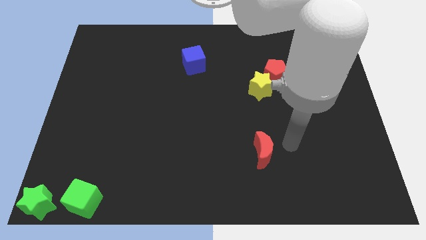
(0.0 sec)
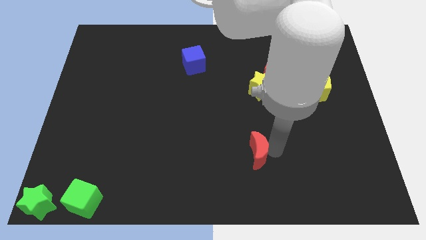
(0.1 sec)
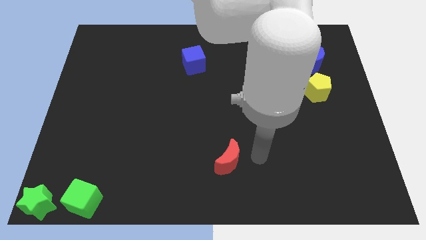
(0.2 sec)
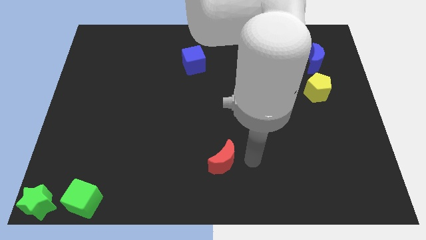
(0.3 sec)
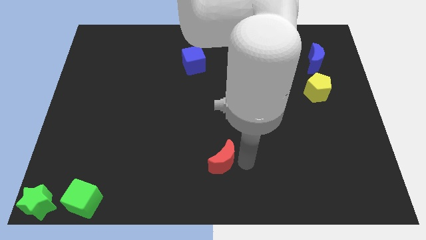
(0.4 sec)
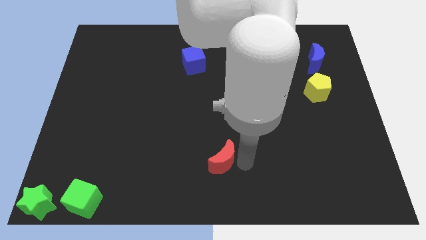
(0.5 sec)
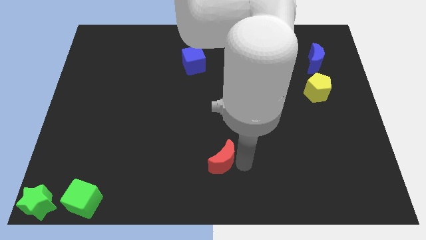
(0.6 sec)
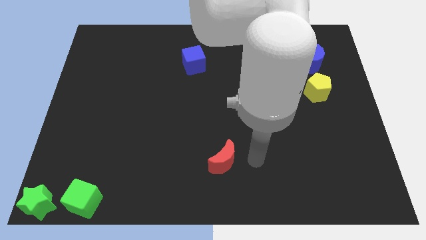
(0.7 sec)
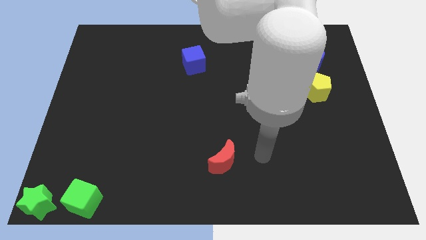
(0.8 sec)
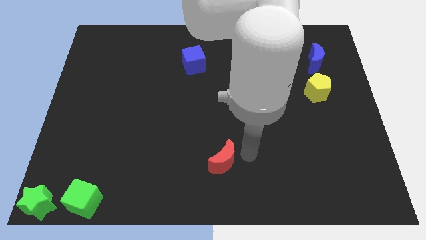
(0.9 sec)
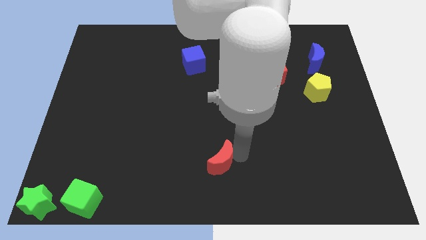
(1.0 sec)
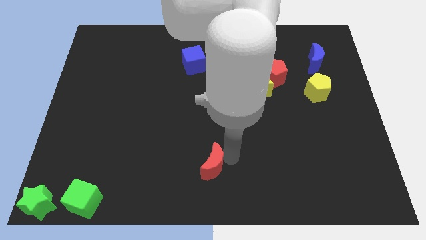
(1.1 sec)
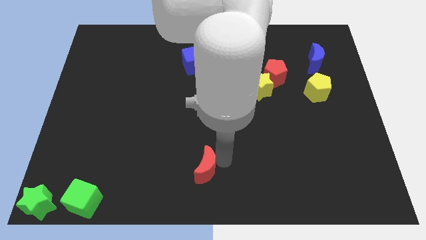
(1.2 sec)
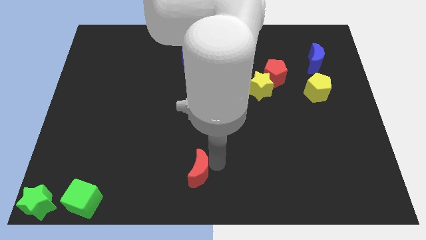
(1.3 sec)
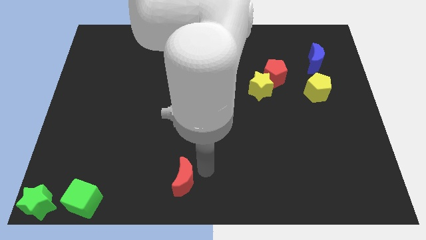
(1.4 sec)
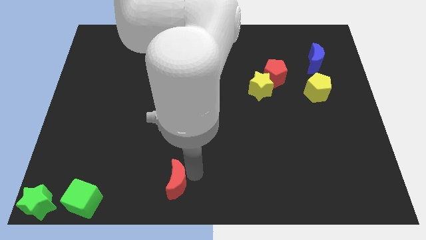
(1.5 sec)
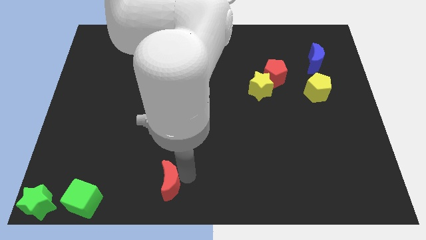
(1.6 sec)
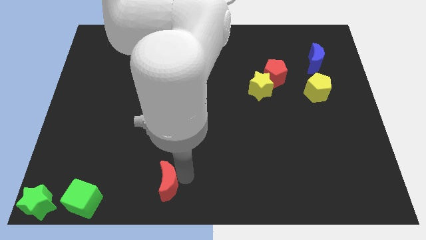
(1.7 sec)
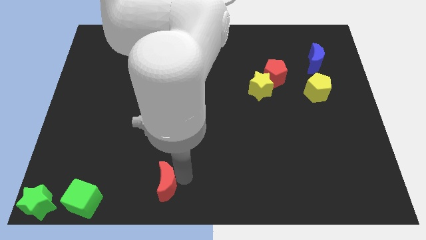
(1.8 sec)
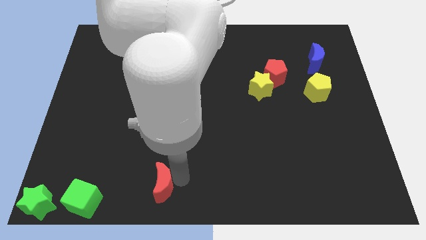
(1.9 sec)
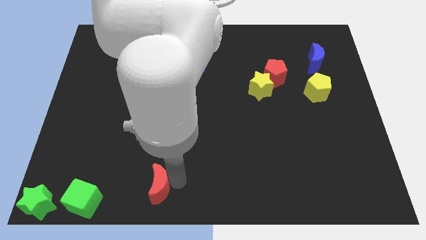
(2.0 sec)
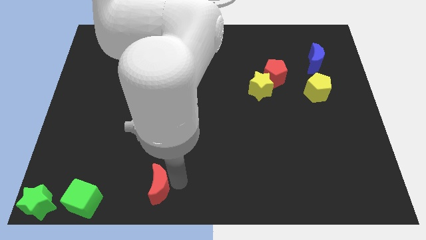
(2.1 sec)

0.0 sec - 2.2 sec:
push the red moon towards the green cube

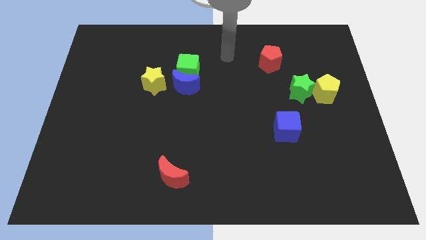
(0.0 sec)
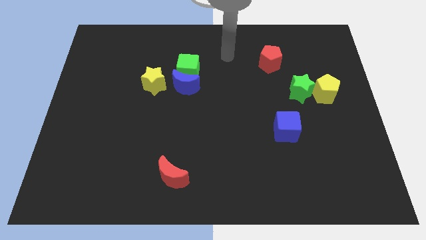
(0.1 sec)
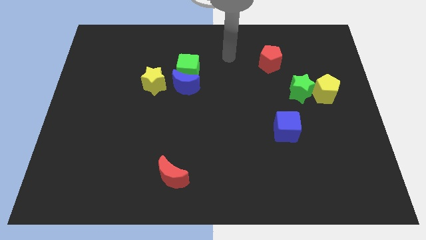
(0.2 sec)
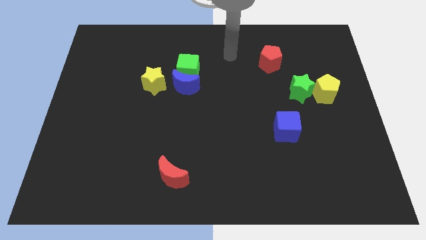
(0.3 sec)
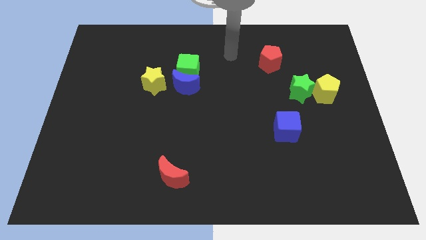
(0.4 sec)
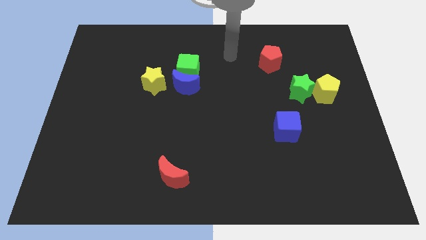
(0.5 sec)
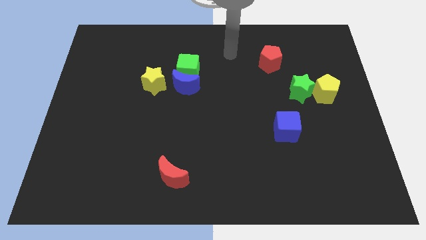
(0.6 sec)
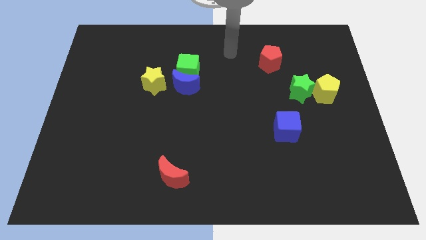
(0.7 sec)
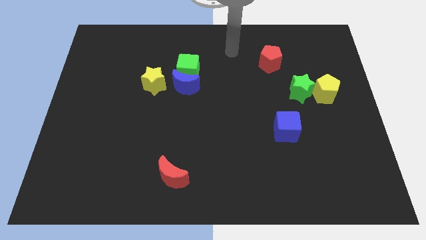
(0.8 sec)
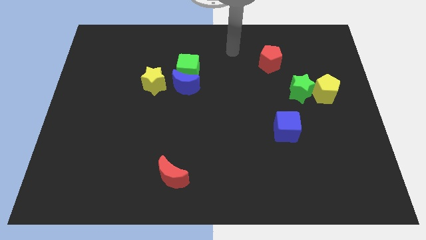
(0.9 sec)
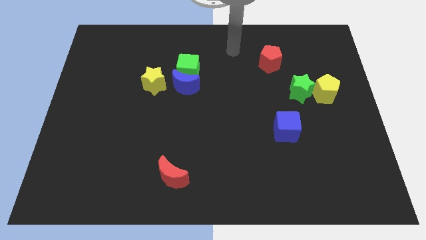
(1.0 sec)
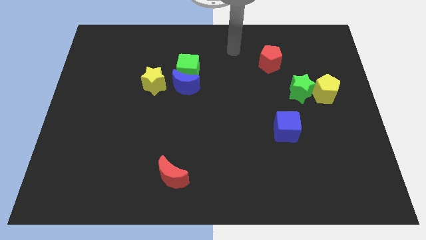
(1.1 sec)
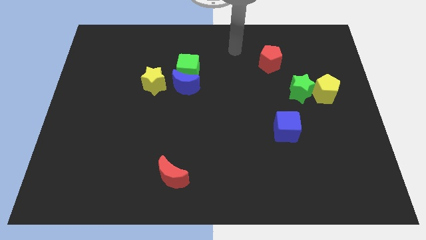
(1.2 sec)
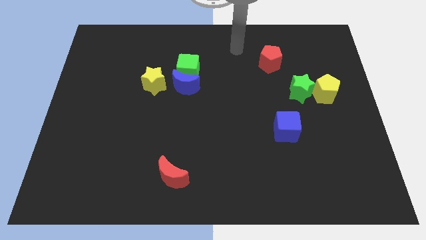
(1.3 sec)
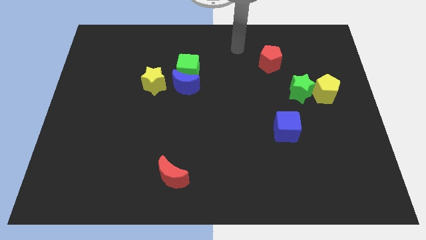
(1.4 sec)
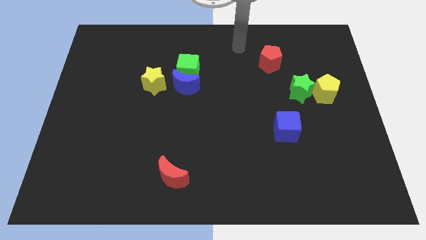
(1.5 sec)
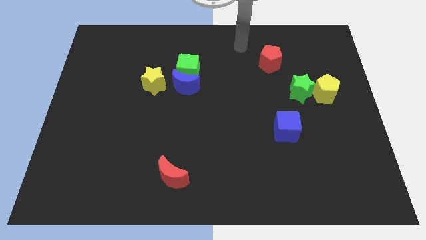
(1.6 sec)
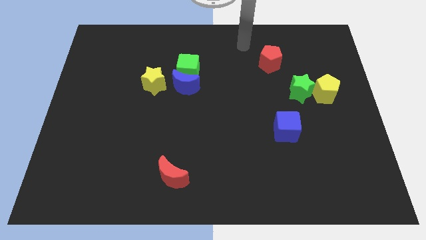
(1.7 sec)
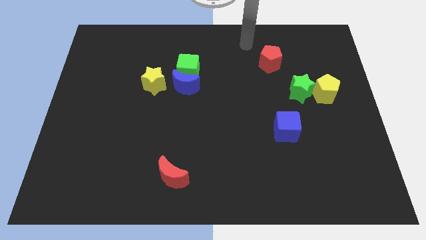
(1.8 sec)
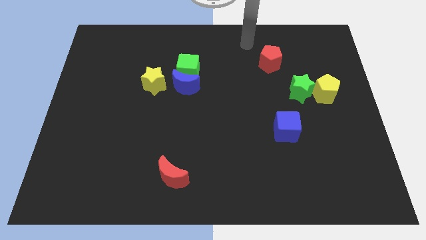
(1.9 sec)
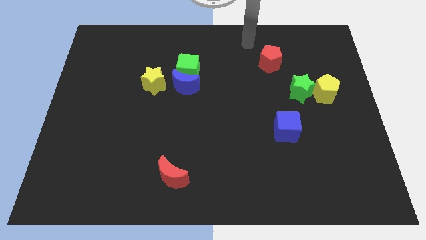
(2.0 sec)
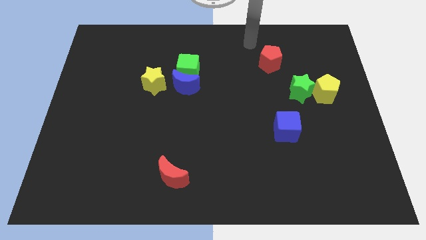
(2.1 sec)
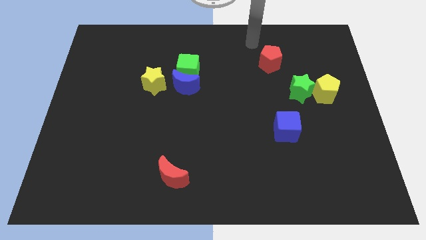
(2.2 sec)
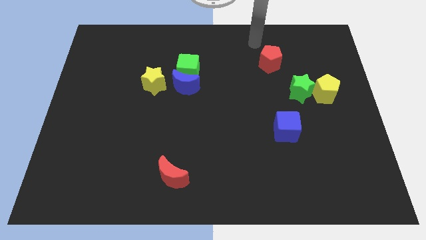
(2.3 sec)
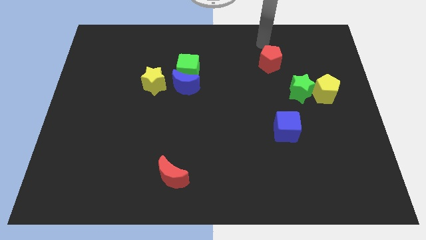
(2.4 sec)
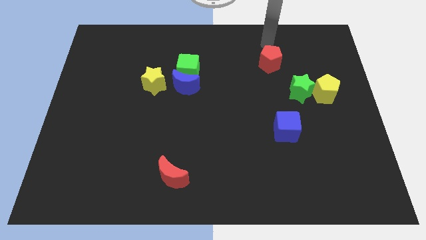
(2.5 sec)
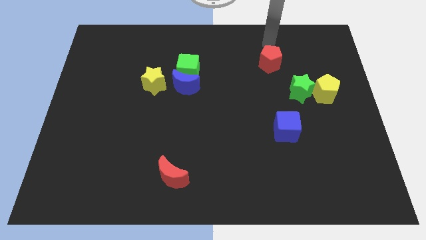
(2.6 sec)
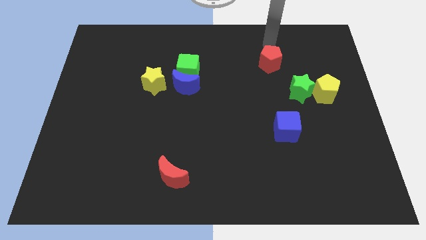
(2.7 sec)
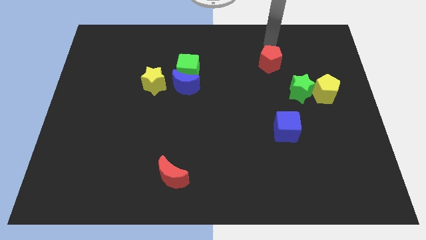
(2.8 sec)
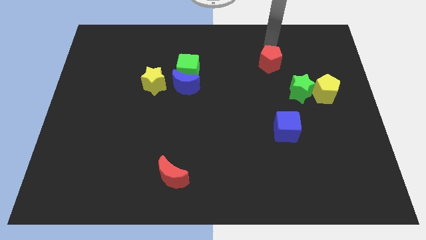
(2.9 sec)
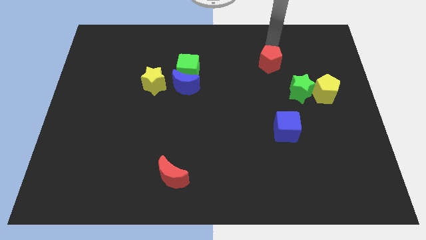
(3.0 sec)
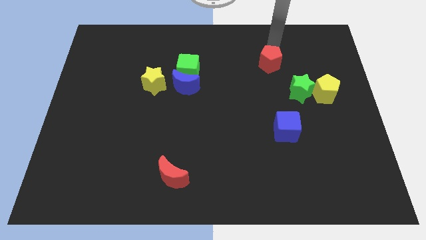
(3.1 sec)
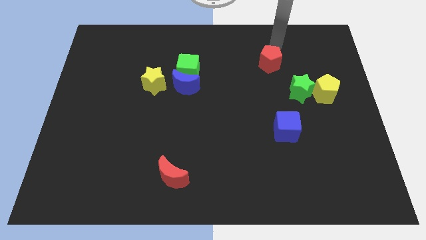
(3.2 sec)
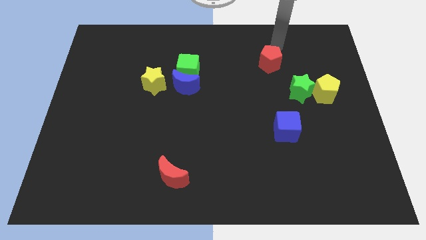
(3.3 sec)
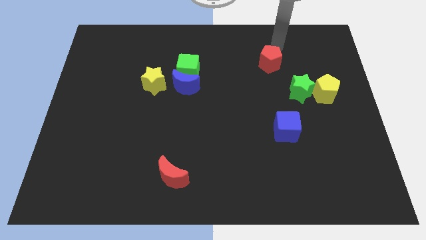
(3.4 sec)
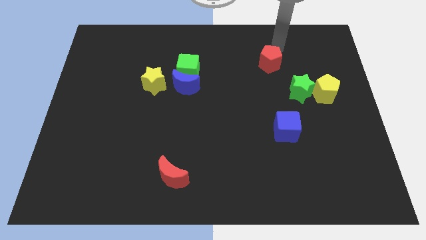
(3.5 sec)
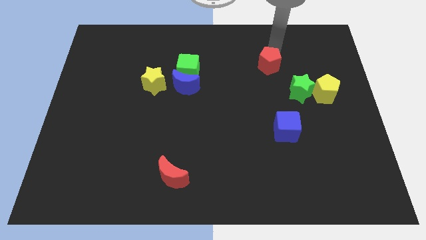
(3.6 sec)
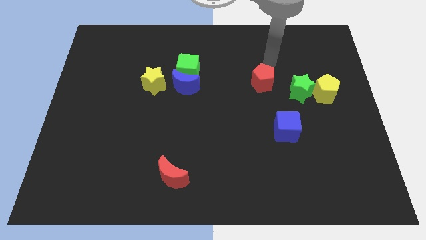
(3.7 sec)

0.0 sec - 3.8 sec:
push the red pentagon vertical left to the green star

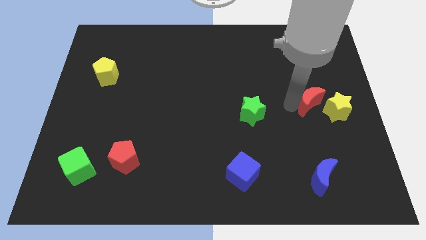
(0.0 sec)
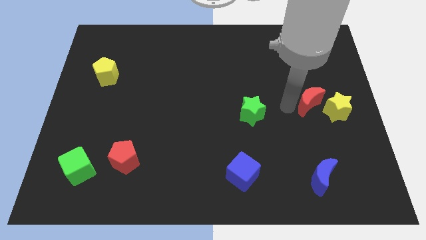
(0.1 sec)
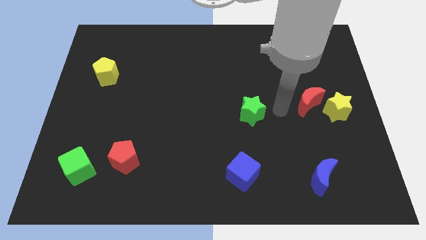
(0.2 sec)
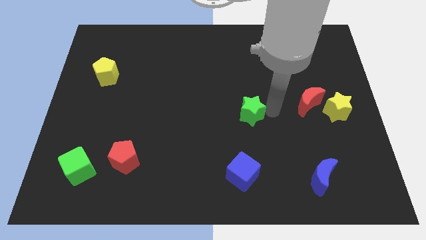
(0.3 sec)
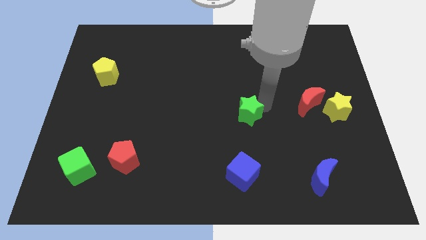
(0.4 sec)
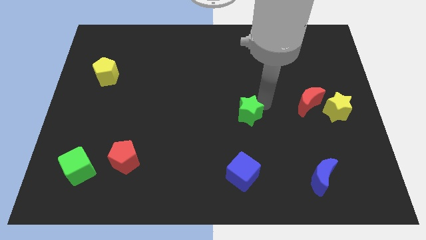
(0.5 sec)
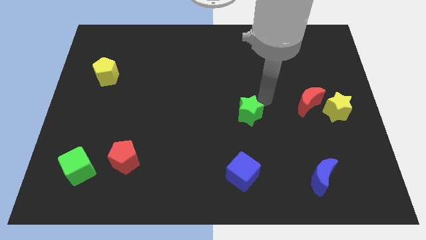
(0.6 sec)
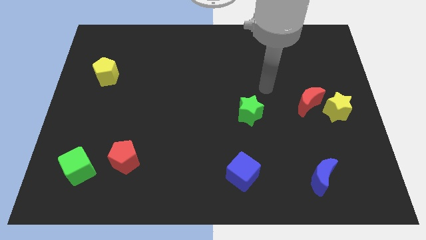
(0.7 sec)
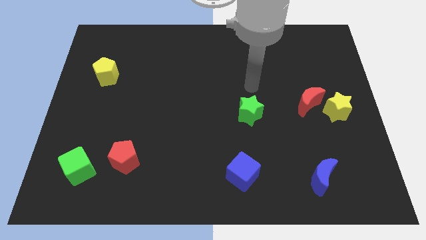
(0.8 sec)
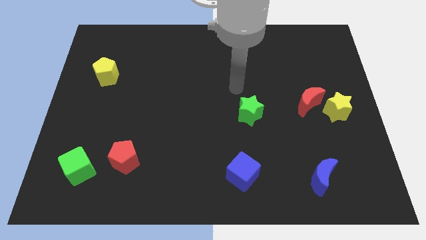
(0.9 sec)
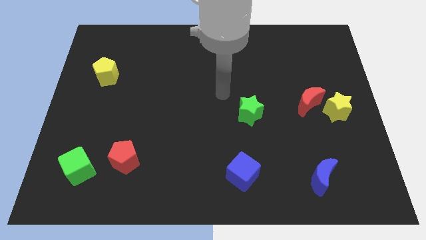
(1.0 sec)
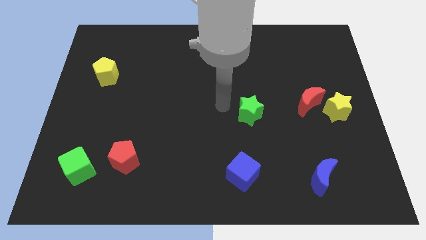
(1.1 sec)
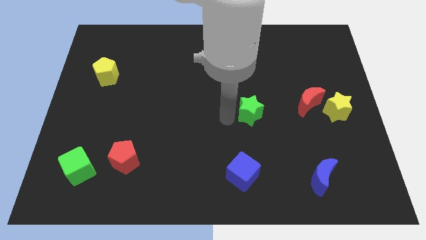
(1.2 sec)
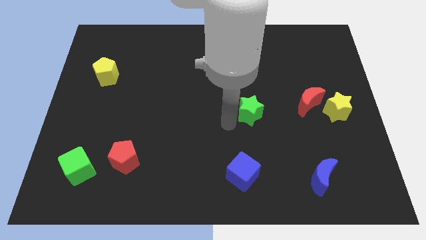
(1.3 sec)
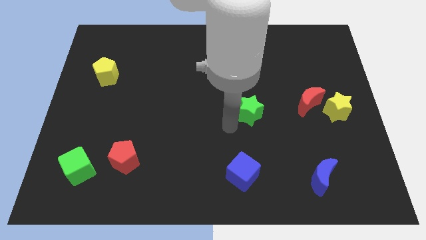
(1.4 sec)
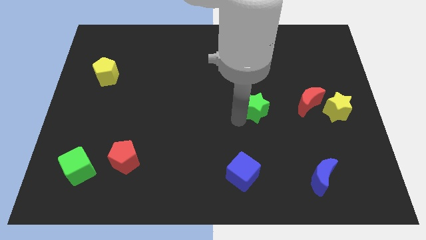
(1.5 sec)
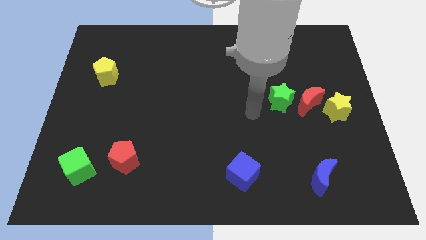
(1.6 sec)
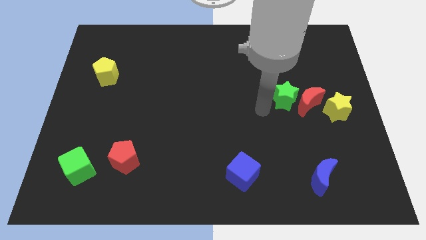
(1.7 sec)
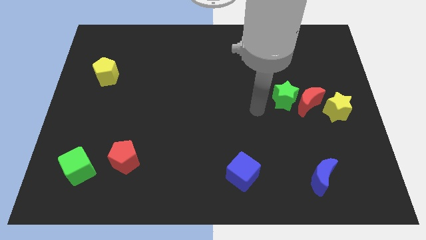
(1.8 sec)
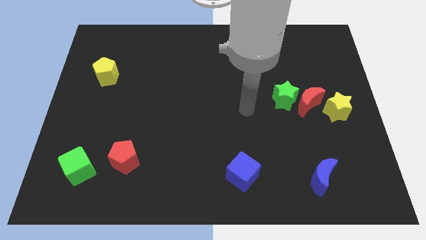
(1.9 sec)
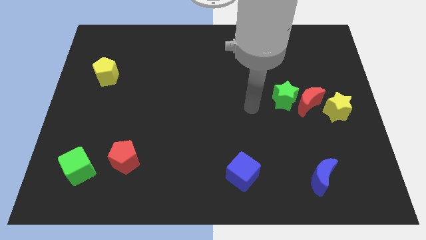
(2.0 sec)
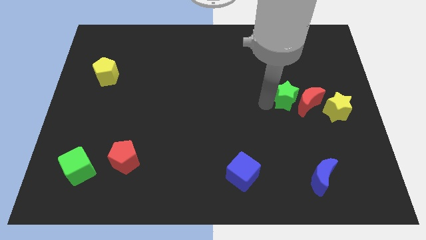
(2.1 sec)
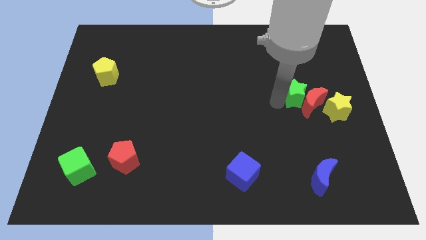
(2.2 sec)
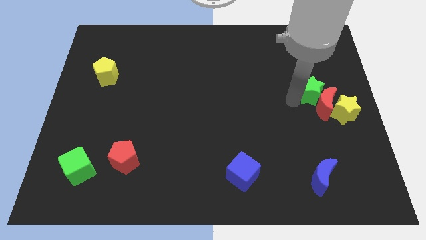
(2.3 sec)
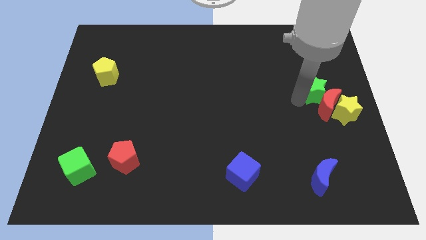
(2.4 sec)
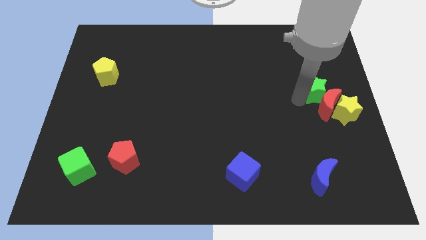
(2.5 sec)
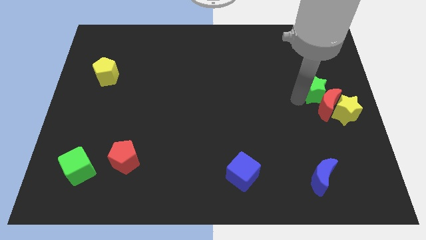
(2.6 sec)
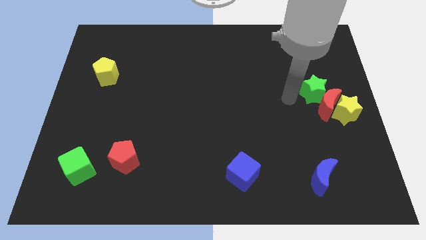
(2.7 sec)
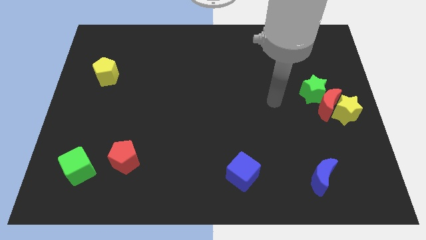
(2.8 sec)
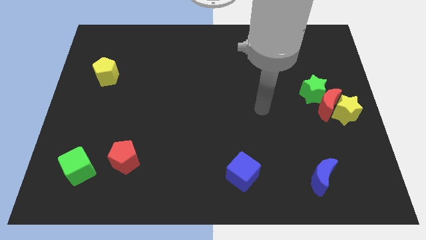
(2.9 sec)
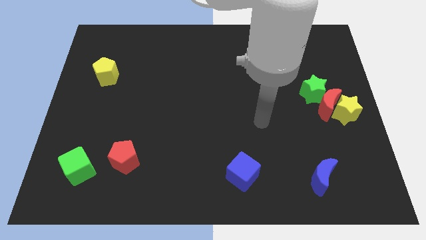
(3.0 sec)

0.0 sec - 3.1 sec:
group up the green star red crescent and yellow star at the right side of the board
